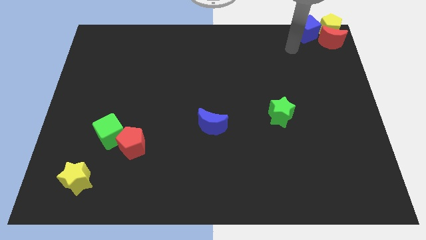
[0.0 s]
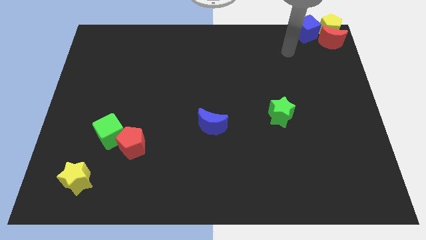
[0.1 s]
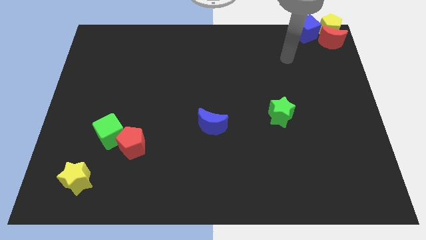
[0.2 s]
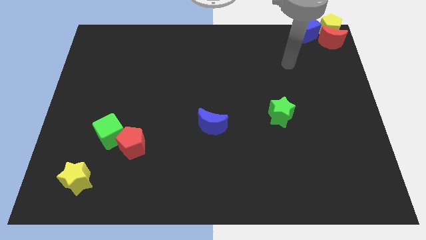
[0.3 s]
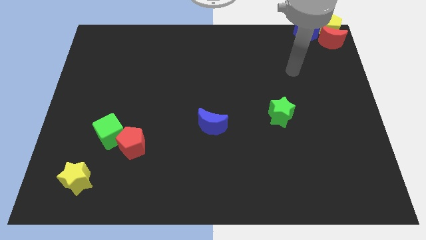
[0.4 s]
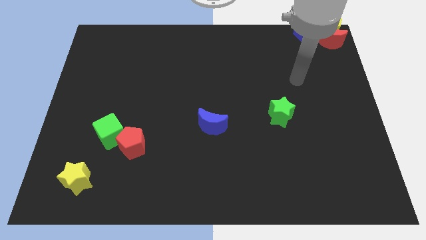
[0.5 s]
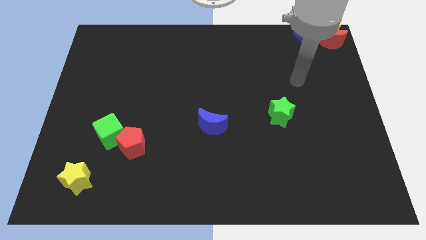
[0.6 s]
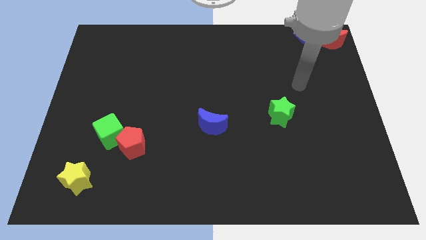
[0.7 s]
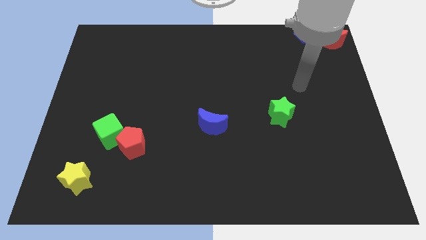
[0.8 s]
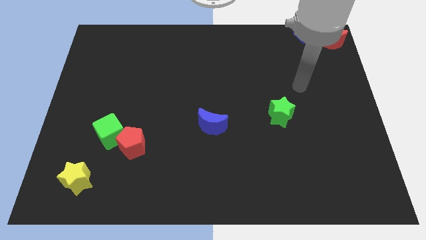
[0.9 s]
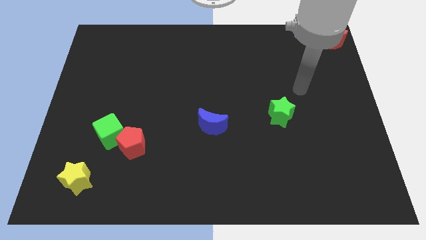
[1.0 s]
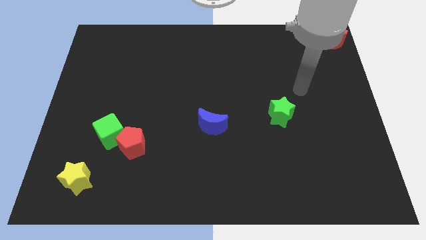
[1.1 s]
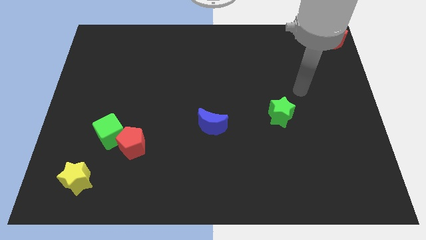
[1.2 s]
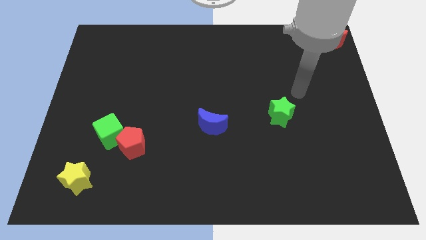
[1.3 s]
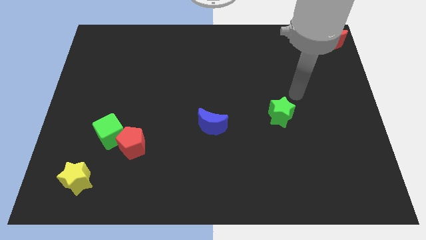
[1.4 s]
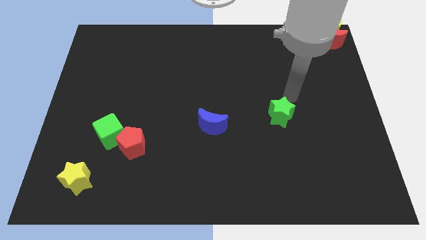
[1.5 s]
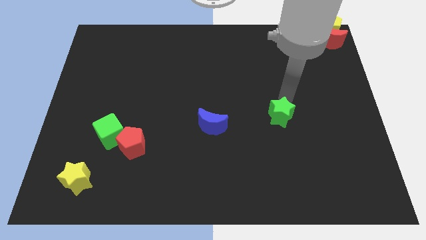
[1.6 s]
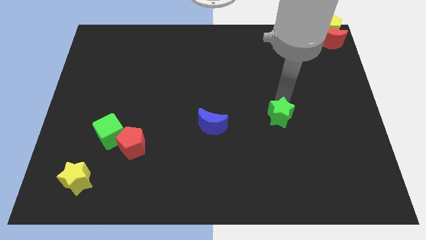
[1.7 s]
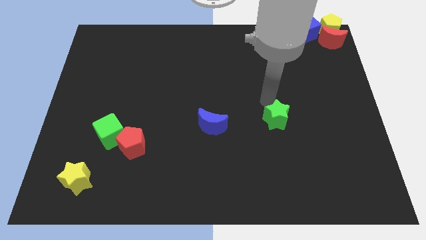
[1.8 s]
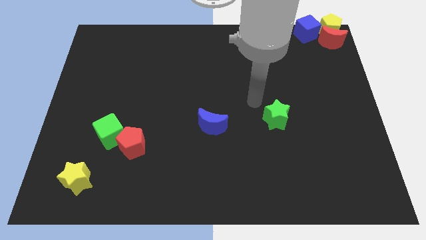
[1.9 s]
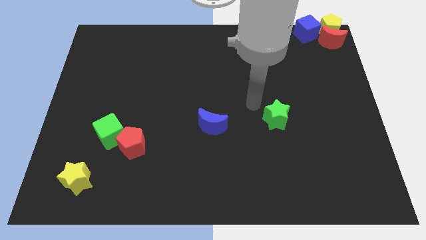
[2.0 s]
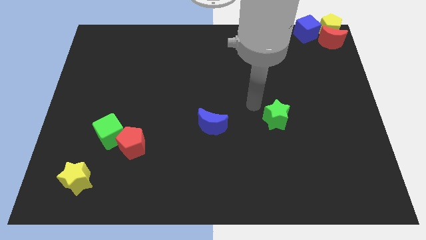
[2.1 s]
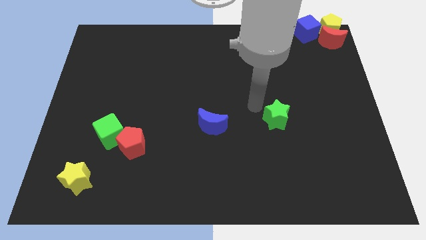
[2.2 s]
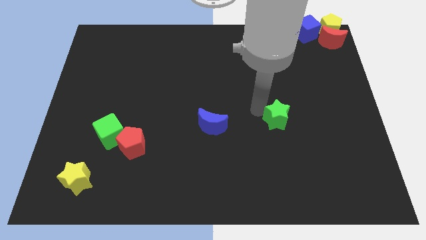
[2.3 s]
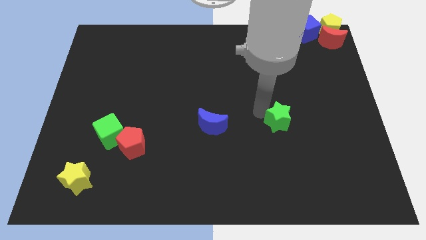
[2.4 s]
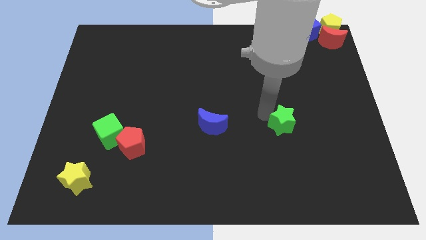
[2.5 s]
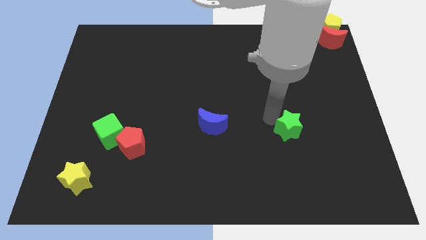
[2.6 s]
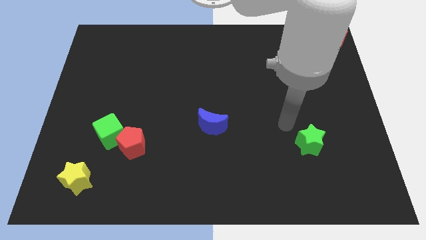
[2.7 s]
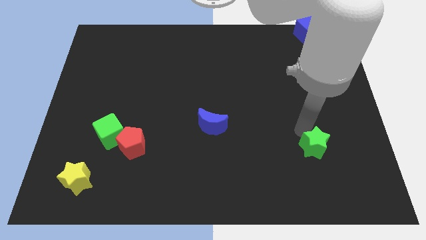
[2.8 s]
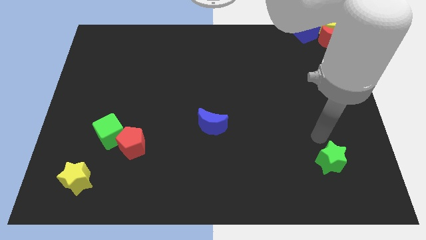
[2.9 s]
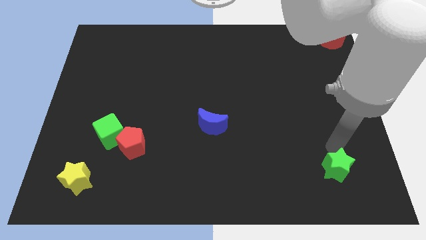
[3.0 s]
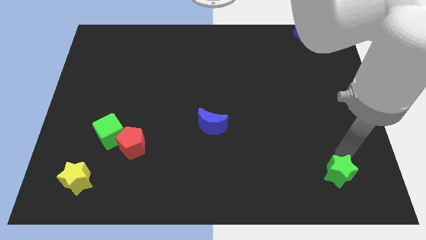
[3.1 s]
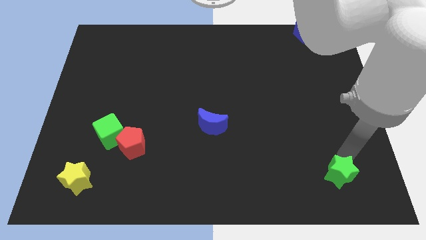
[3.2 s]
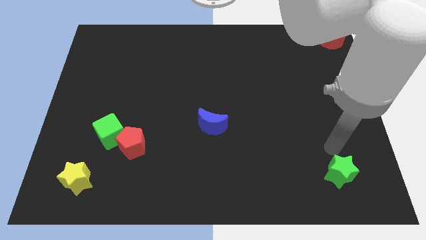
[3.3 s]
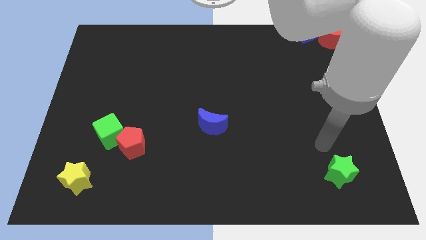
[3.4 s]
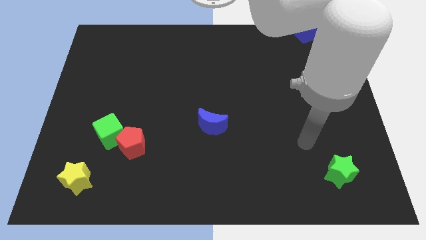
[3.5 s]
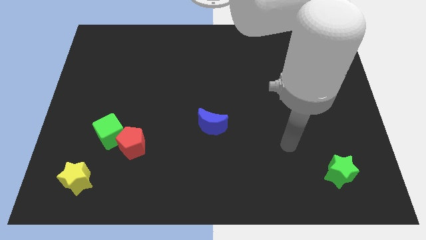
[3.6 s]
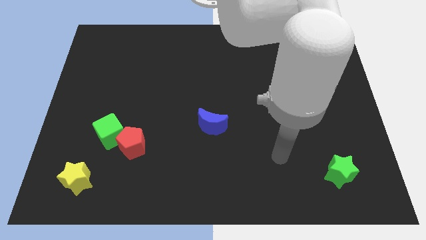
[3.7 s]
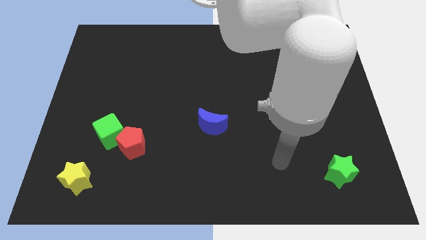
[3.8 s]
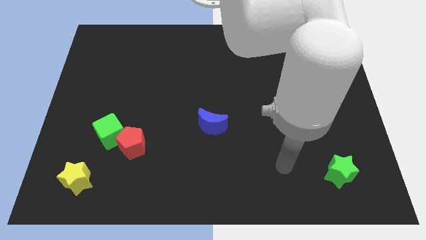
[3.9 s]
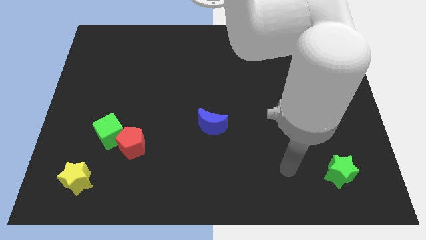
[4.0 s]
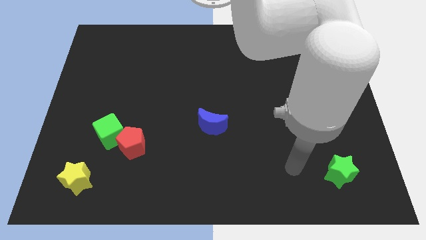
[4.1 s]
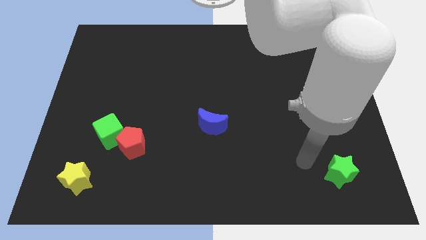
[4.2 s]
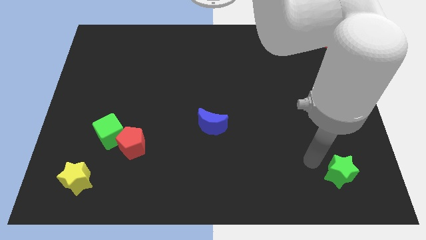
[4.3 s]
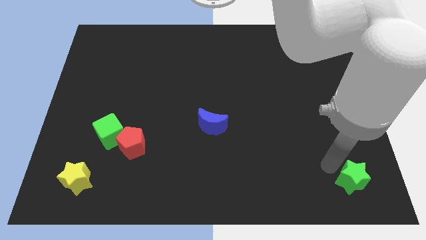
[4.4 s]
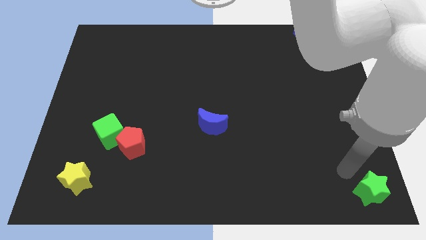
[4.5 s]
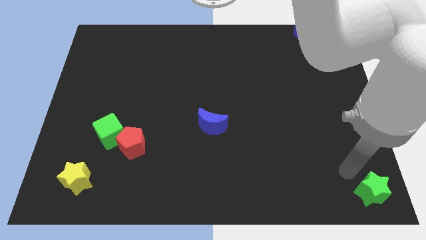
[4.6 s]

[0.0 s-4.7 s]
push the green star towards the bottom right of the table

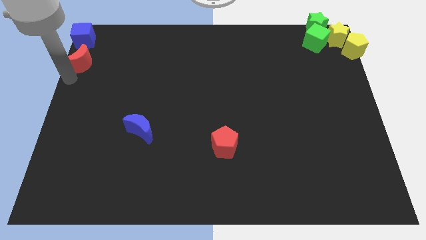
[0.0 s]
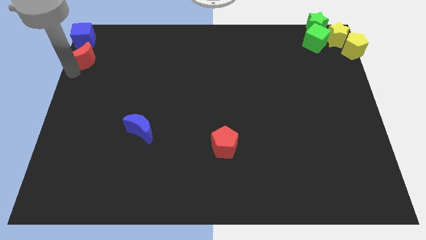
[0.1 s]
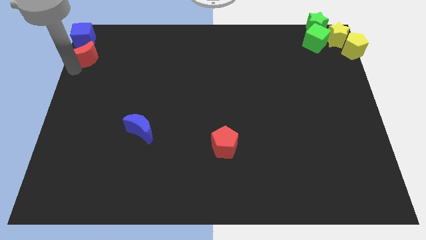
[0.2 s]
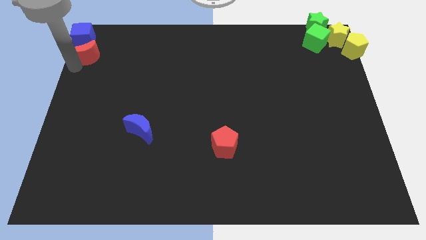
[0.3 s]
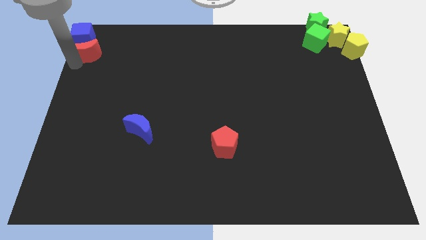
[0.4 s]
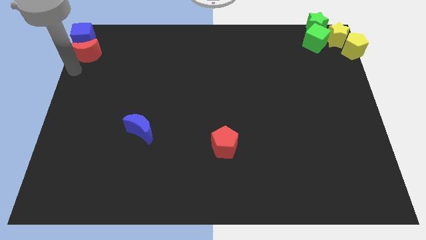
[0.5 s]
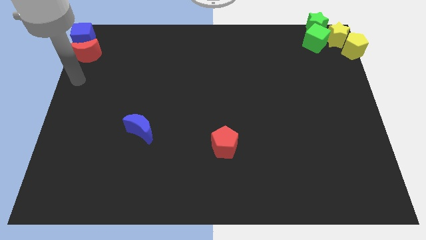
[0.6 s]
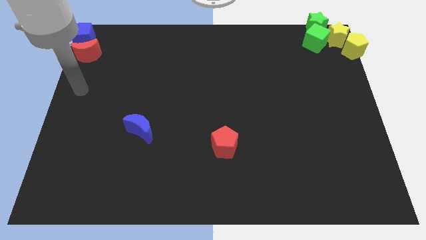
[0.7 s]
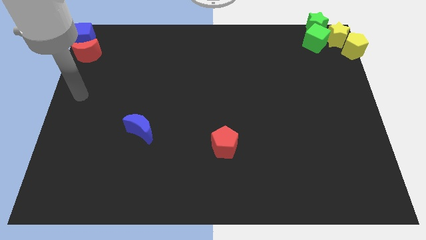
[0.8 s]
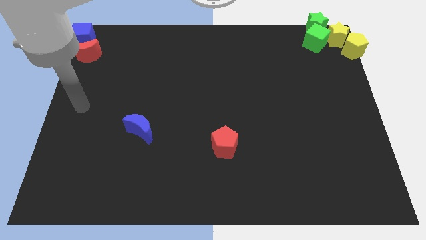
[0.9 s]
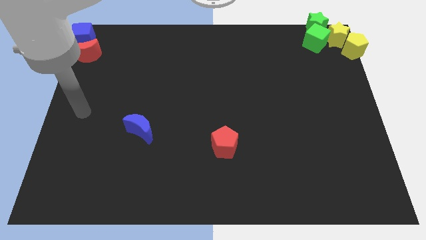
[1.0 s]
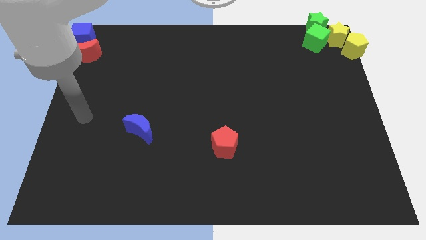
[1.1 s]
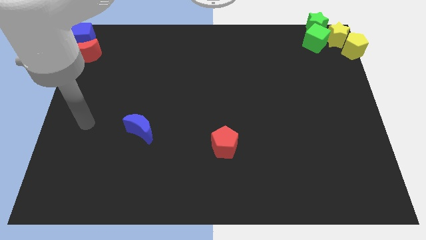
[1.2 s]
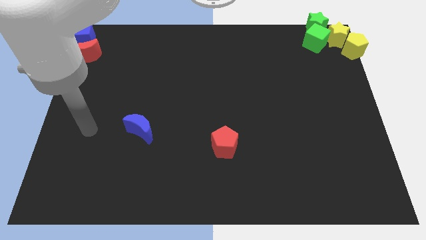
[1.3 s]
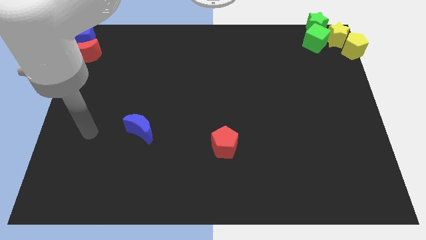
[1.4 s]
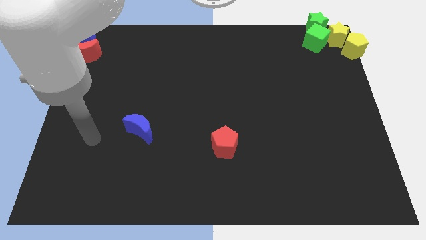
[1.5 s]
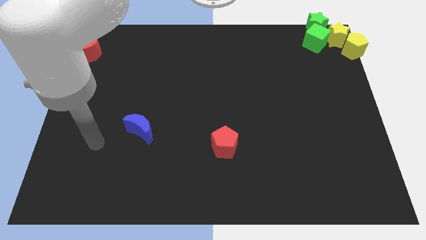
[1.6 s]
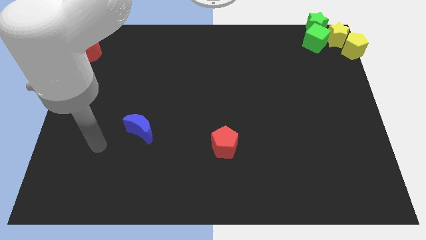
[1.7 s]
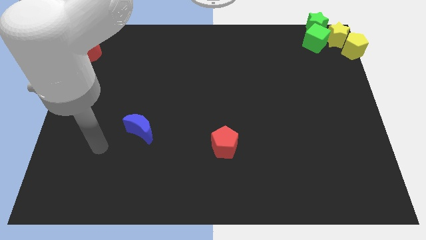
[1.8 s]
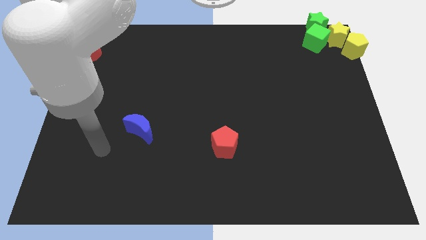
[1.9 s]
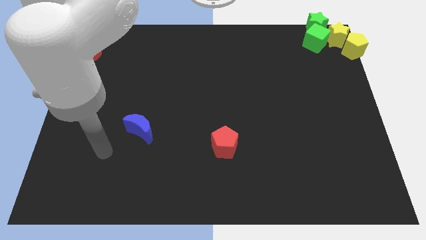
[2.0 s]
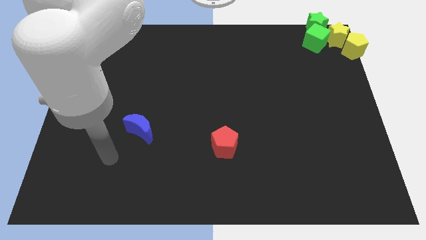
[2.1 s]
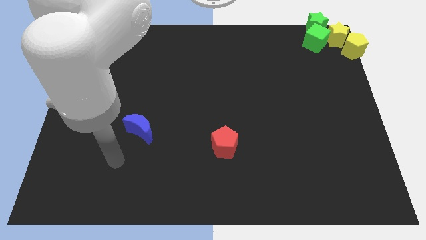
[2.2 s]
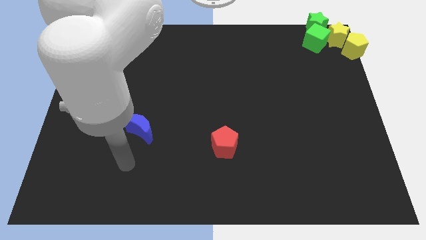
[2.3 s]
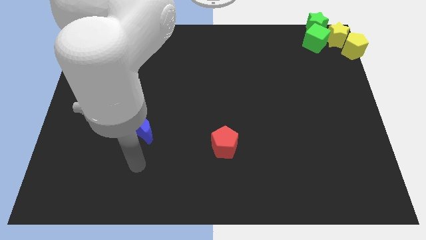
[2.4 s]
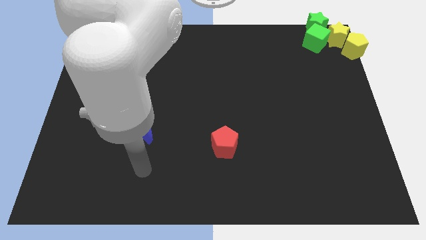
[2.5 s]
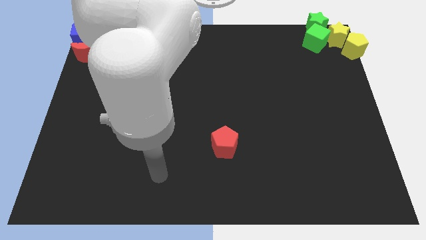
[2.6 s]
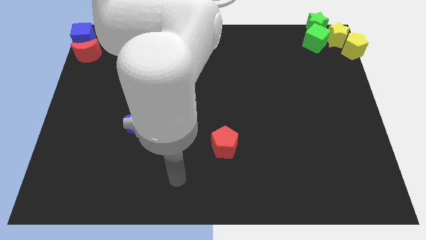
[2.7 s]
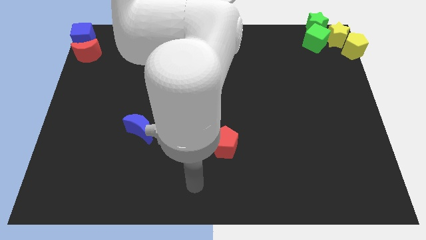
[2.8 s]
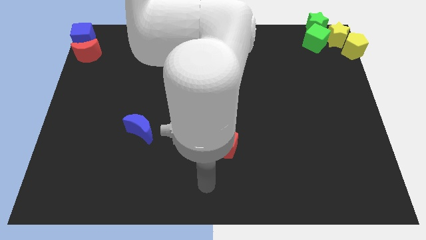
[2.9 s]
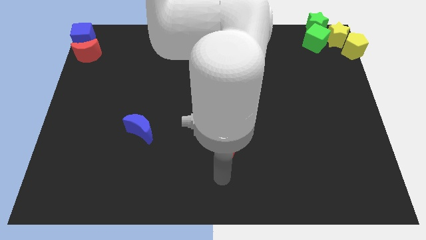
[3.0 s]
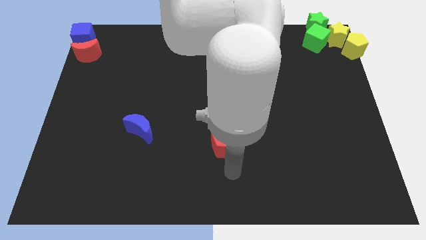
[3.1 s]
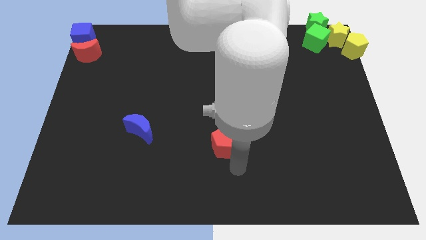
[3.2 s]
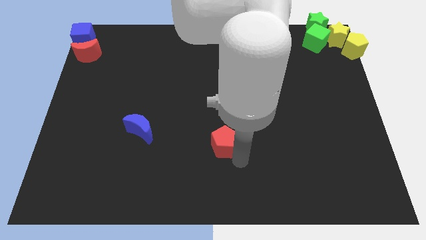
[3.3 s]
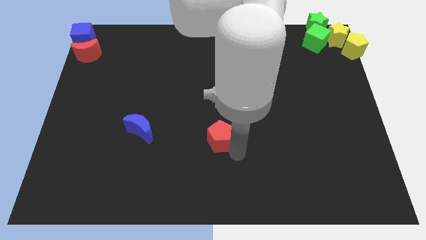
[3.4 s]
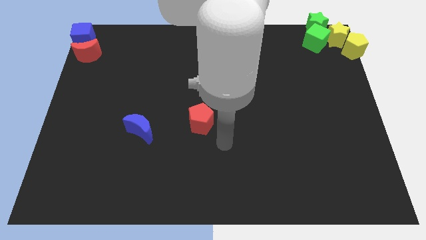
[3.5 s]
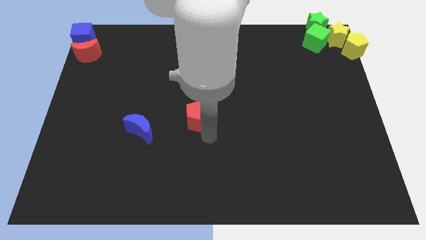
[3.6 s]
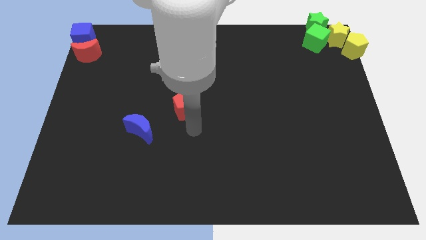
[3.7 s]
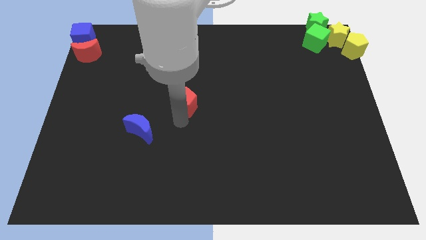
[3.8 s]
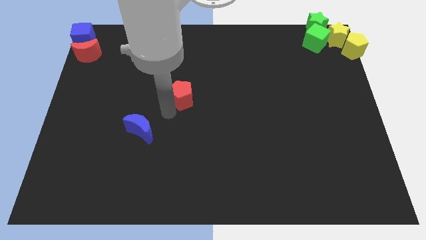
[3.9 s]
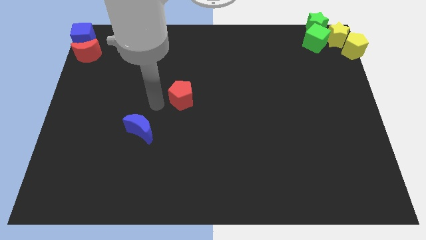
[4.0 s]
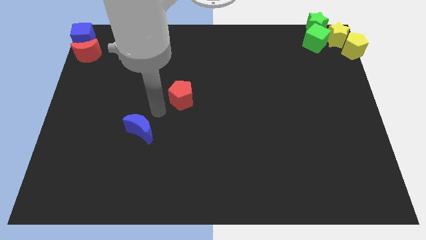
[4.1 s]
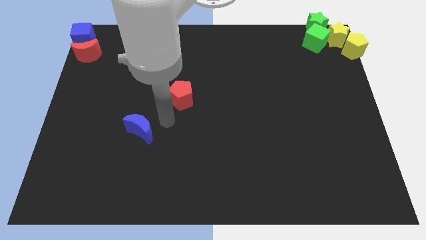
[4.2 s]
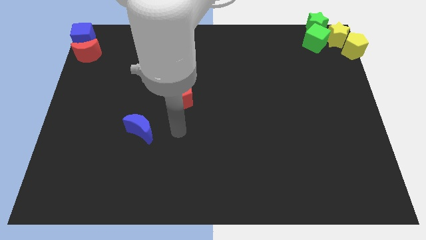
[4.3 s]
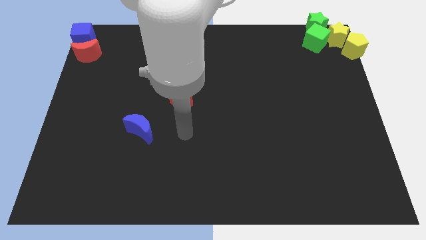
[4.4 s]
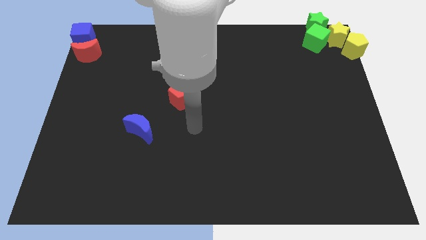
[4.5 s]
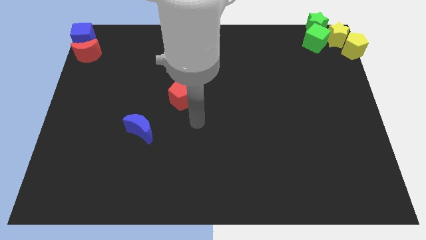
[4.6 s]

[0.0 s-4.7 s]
move the red pentagon to the center
